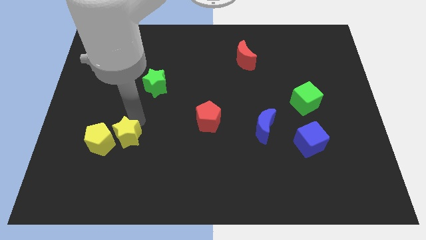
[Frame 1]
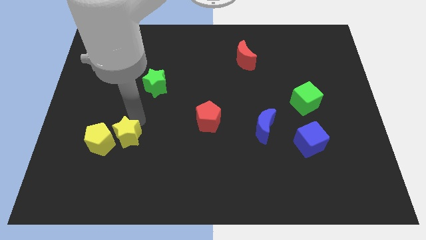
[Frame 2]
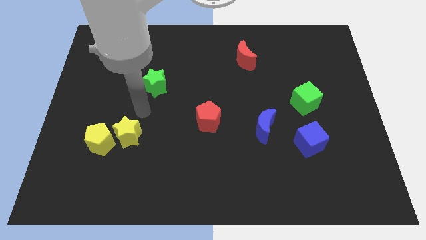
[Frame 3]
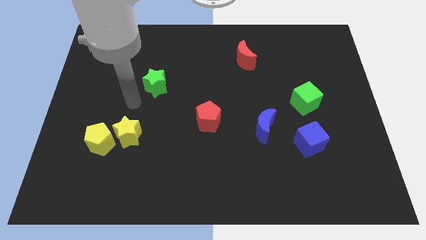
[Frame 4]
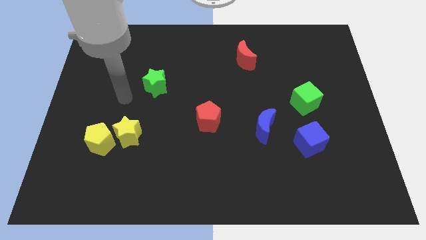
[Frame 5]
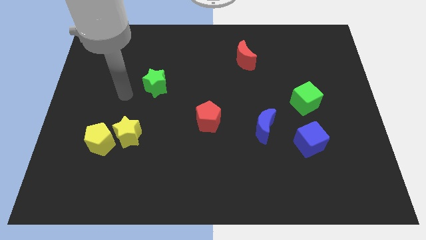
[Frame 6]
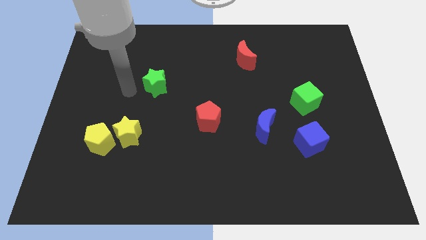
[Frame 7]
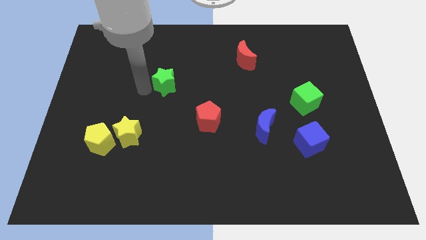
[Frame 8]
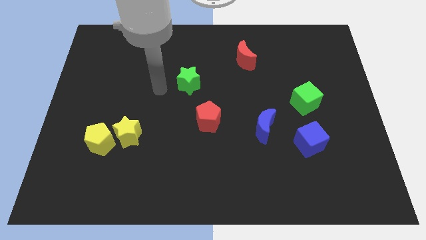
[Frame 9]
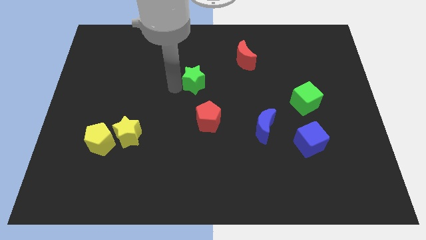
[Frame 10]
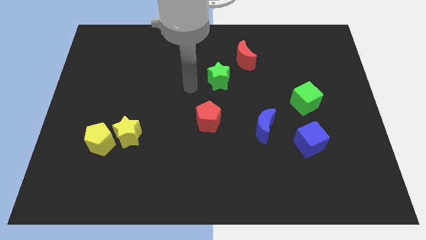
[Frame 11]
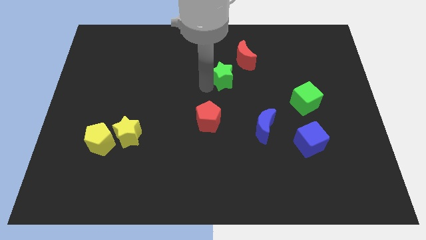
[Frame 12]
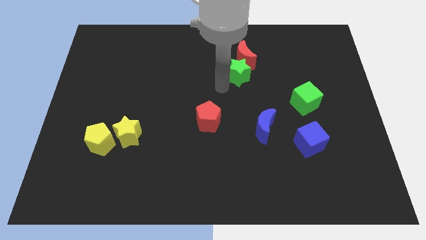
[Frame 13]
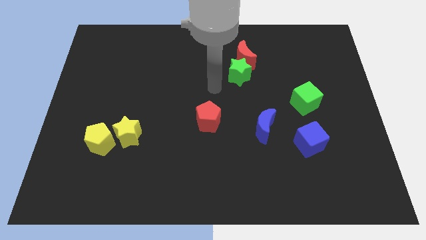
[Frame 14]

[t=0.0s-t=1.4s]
place the green star at the bottom left side of red moon

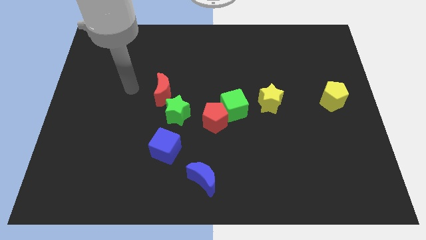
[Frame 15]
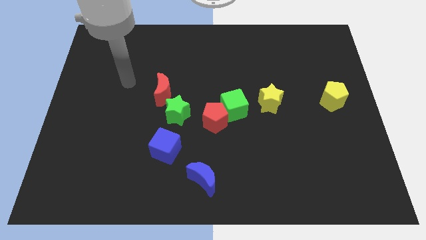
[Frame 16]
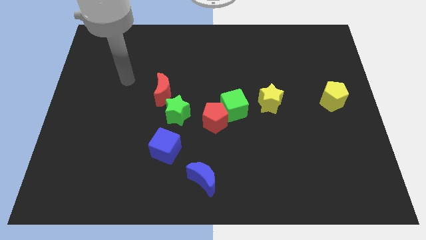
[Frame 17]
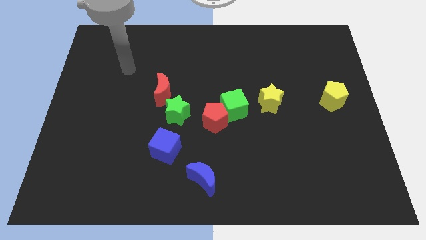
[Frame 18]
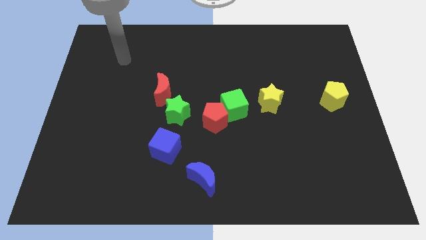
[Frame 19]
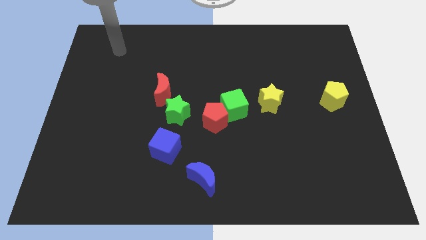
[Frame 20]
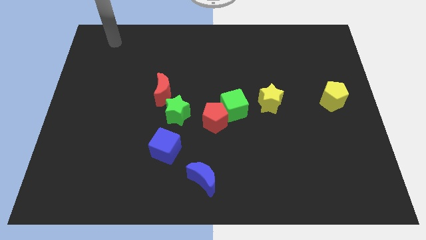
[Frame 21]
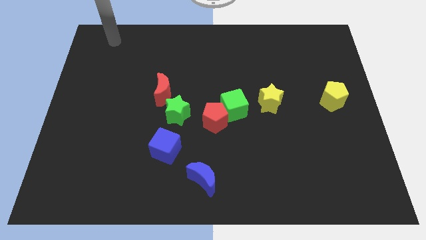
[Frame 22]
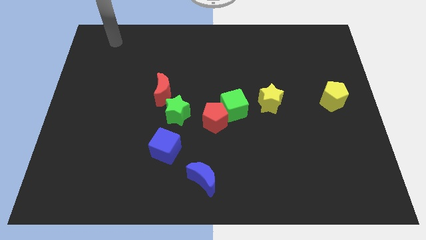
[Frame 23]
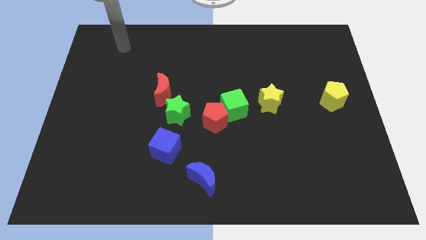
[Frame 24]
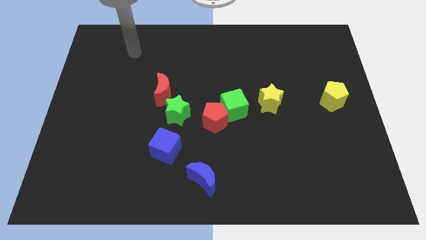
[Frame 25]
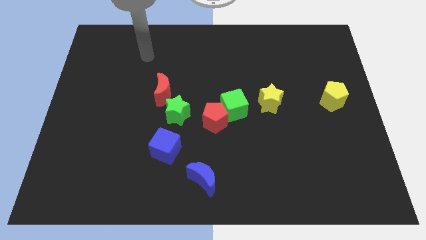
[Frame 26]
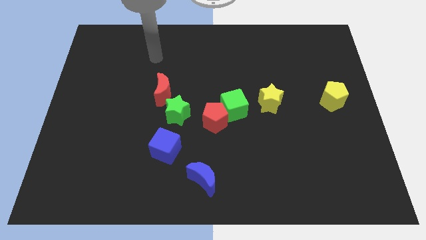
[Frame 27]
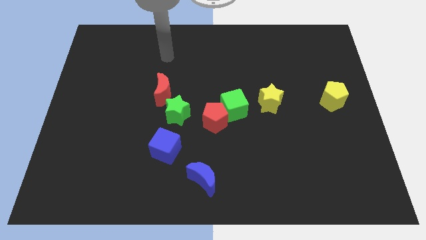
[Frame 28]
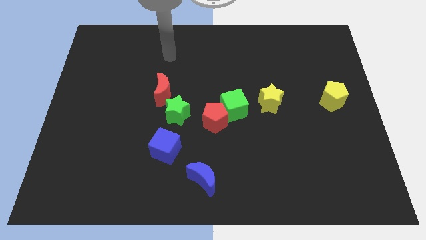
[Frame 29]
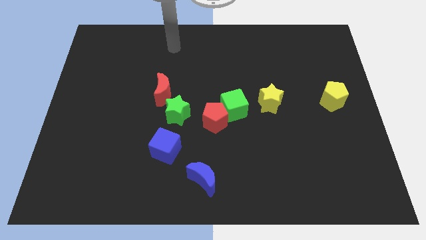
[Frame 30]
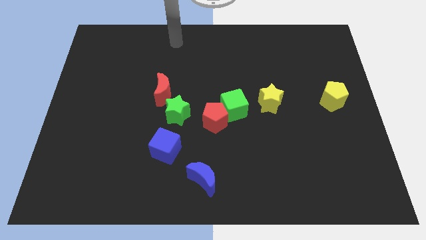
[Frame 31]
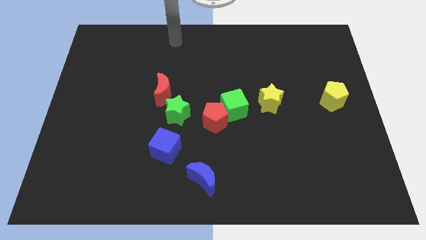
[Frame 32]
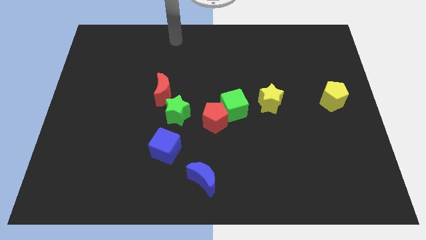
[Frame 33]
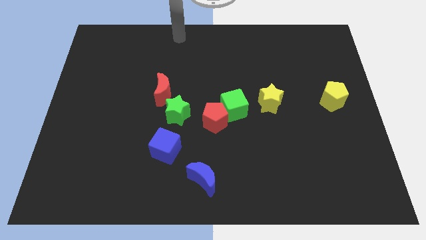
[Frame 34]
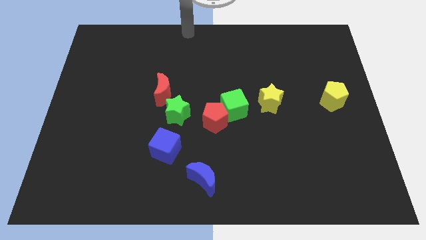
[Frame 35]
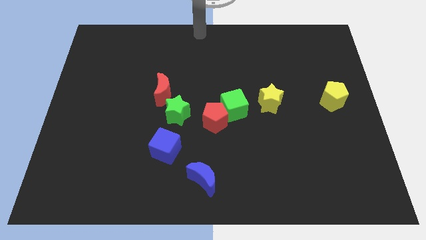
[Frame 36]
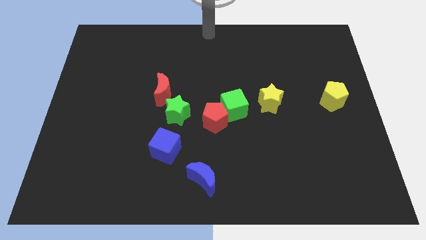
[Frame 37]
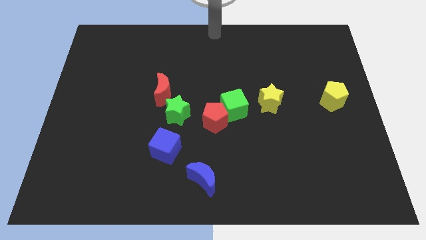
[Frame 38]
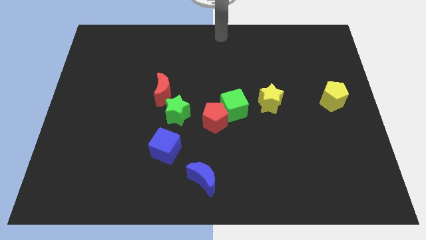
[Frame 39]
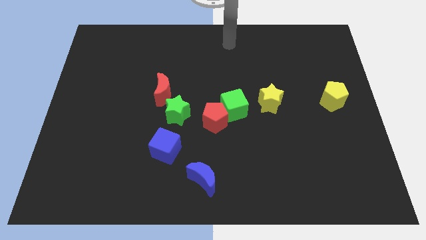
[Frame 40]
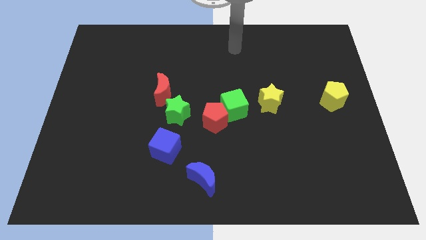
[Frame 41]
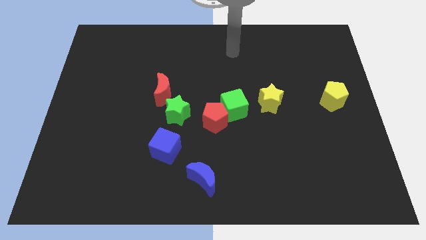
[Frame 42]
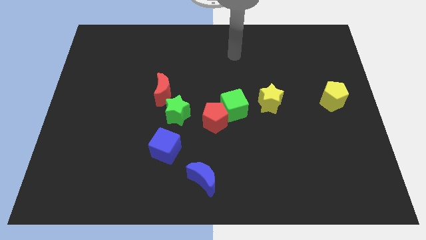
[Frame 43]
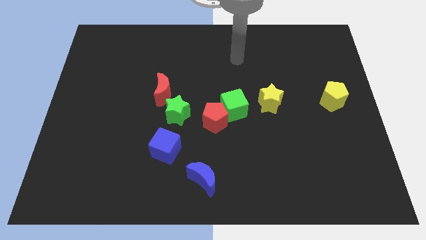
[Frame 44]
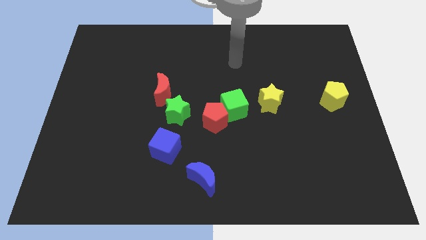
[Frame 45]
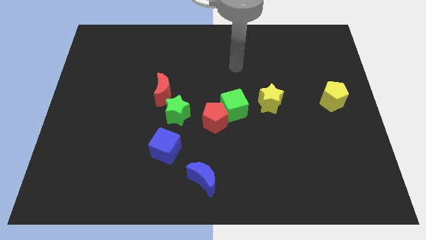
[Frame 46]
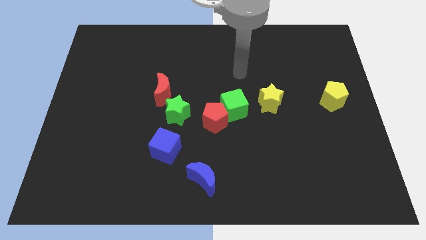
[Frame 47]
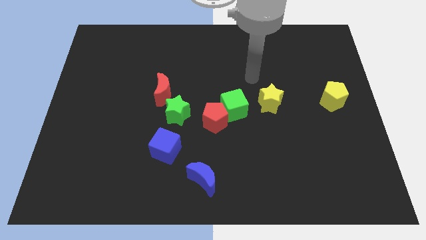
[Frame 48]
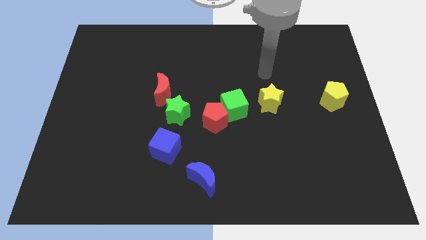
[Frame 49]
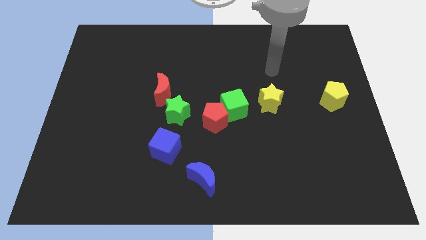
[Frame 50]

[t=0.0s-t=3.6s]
place your hand above the yellow star

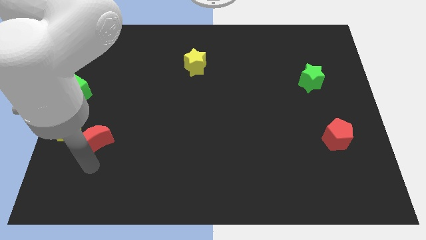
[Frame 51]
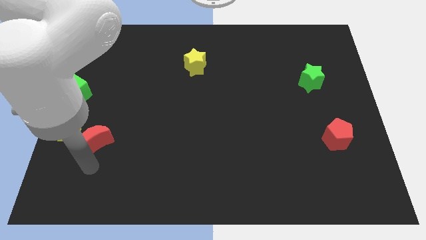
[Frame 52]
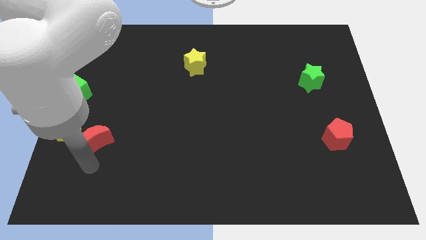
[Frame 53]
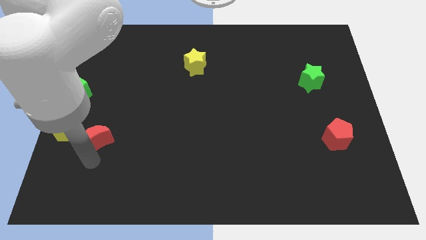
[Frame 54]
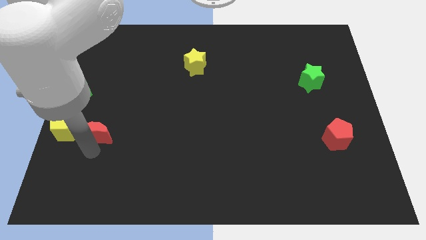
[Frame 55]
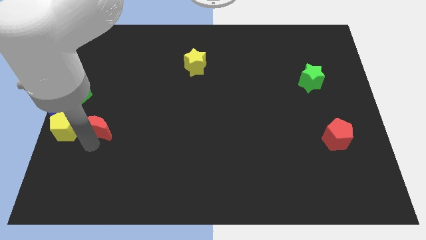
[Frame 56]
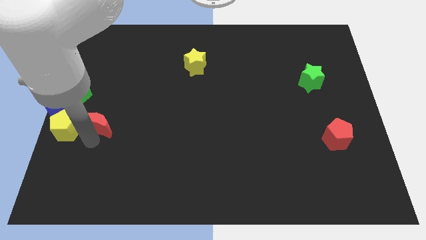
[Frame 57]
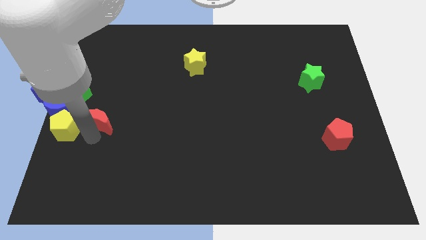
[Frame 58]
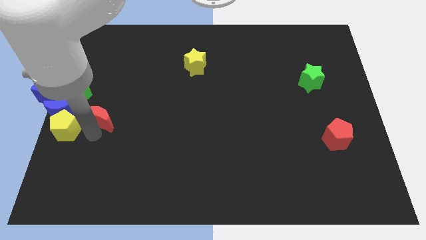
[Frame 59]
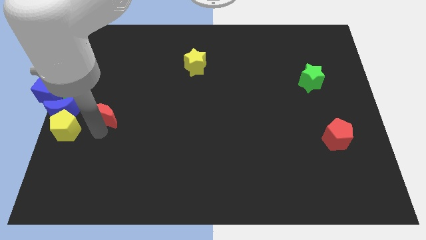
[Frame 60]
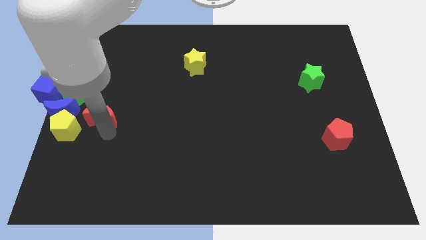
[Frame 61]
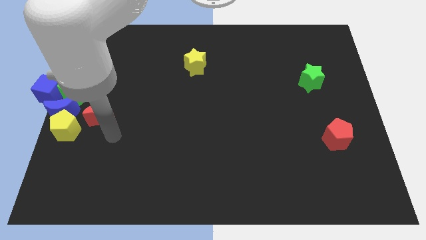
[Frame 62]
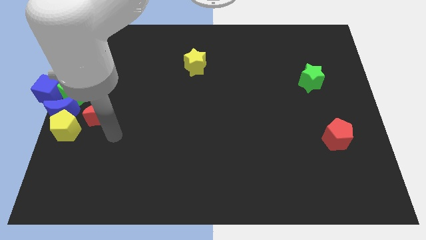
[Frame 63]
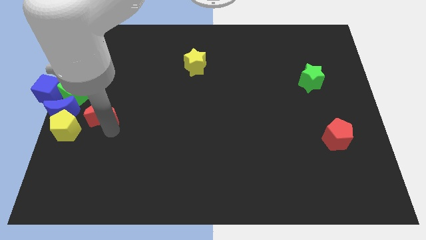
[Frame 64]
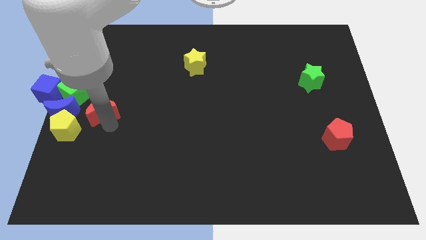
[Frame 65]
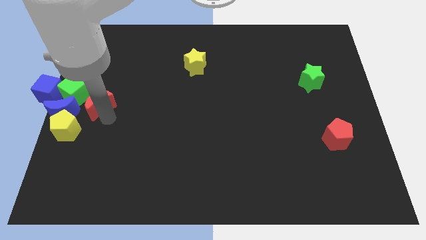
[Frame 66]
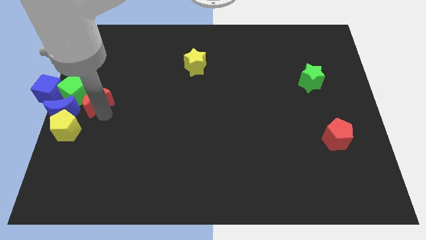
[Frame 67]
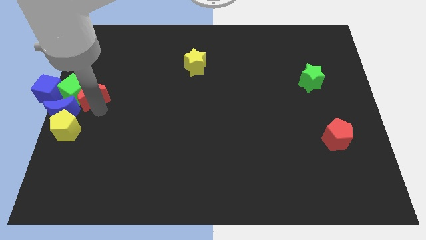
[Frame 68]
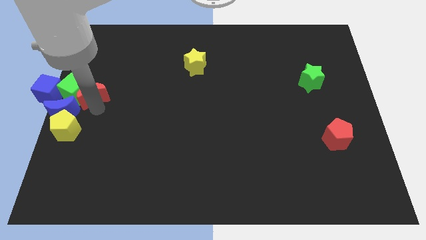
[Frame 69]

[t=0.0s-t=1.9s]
push the red moon into the green cube

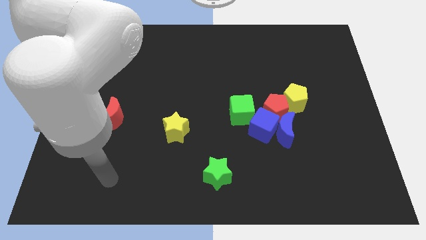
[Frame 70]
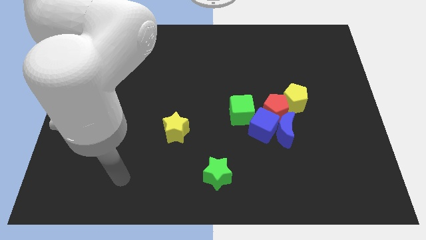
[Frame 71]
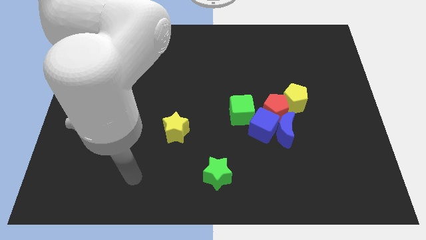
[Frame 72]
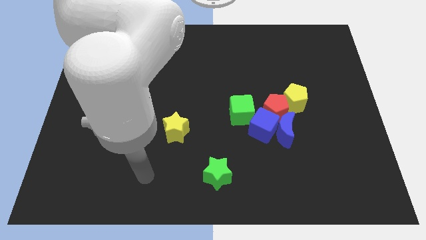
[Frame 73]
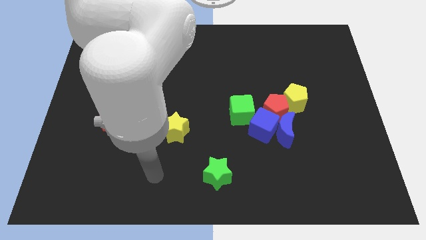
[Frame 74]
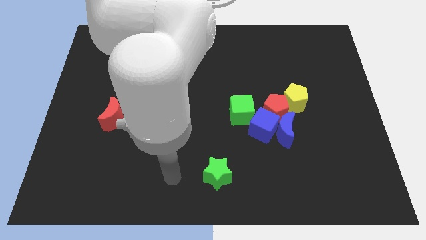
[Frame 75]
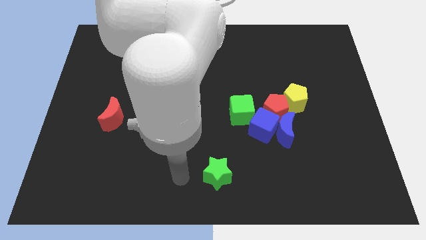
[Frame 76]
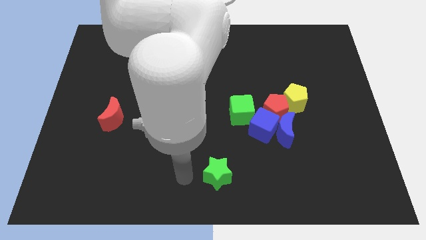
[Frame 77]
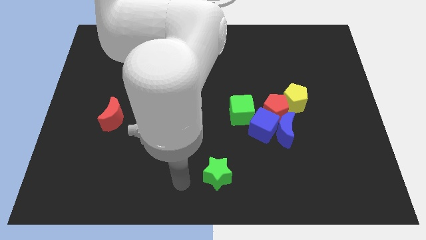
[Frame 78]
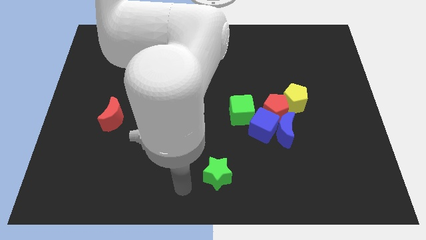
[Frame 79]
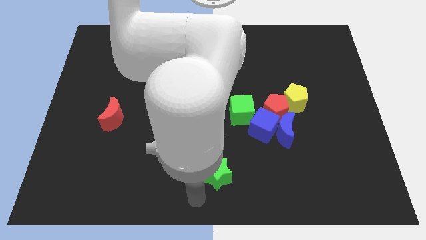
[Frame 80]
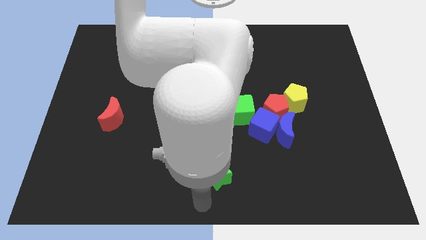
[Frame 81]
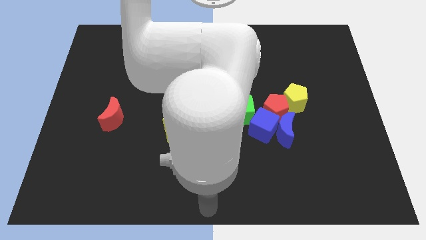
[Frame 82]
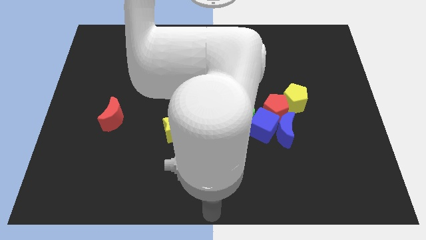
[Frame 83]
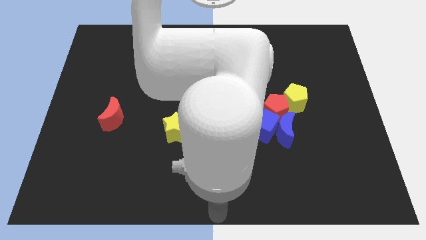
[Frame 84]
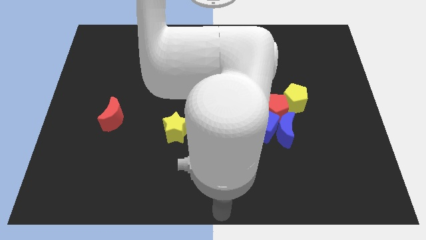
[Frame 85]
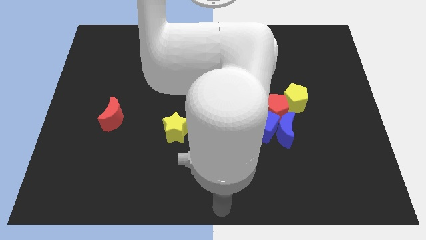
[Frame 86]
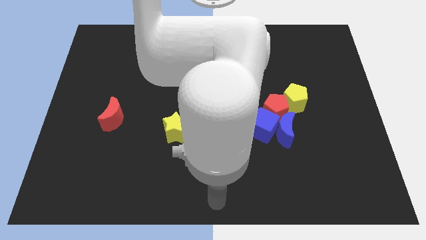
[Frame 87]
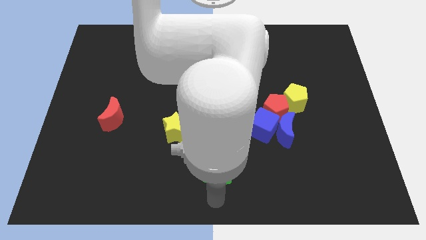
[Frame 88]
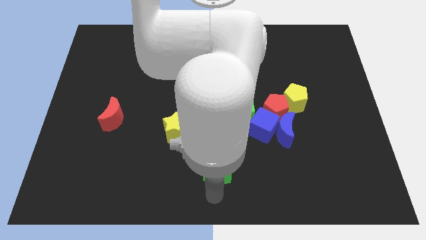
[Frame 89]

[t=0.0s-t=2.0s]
place your arm at the bottom center

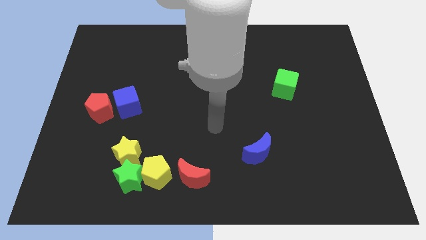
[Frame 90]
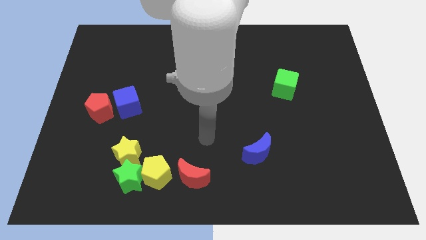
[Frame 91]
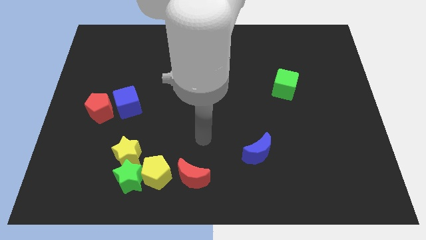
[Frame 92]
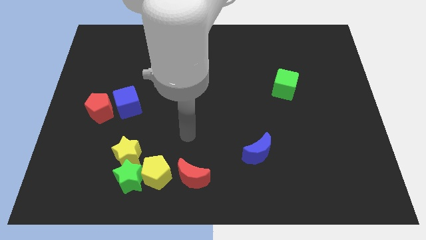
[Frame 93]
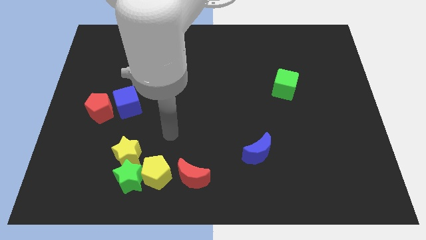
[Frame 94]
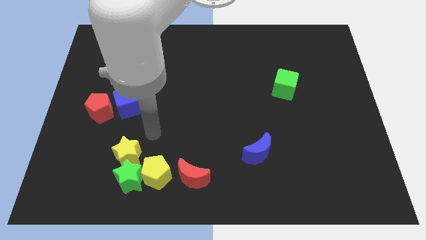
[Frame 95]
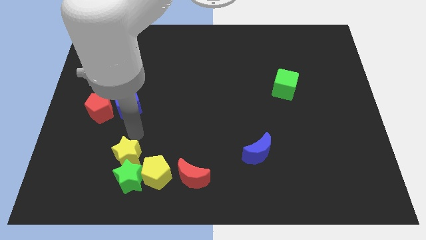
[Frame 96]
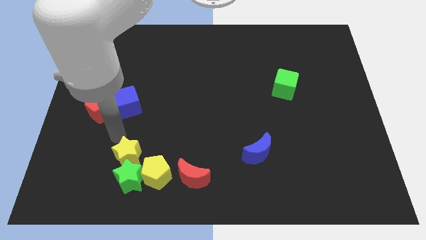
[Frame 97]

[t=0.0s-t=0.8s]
place your arm in between blue cube and yellow star
